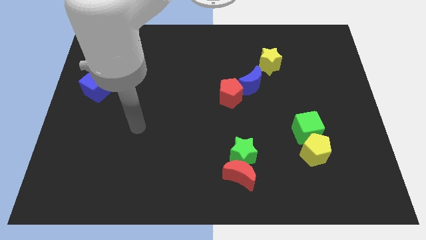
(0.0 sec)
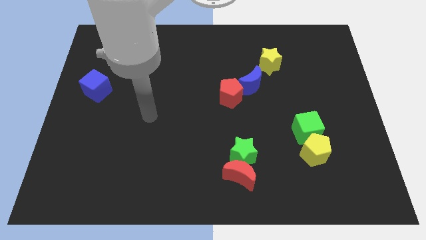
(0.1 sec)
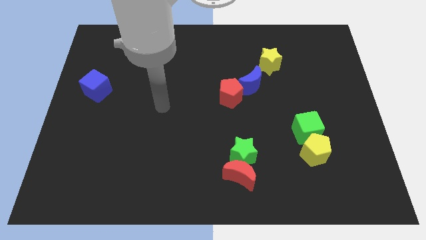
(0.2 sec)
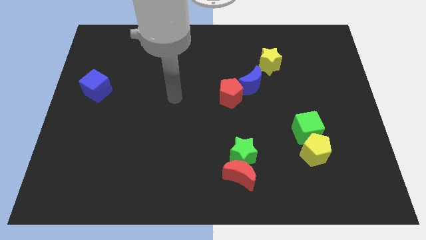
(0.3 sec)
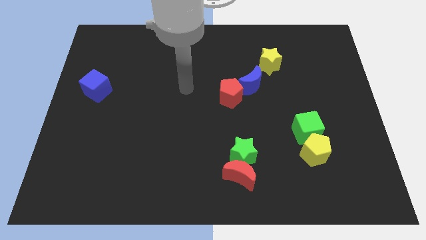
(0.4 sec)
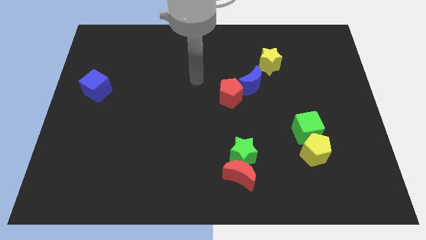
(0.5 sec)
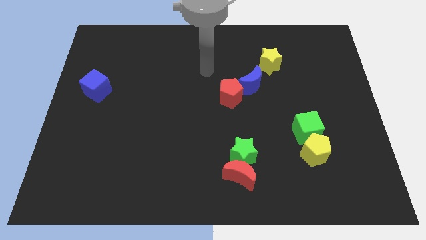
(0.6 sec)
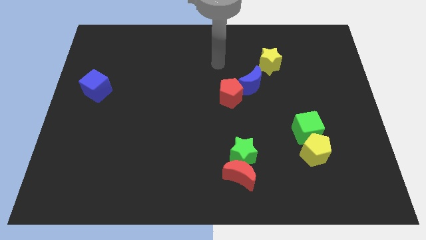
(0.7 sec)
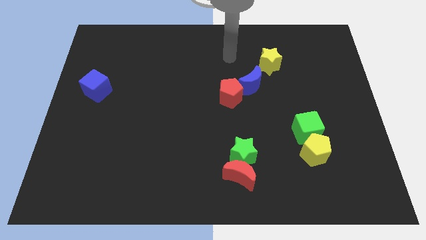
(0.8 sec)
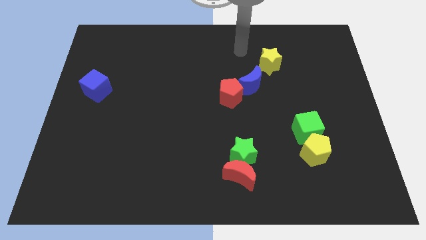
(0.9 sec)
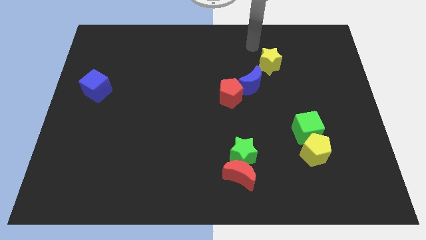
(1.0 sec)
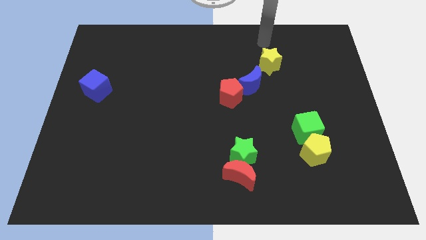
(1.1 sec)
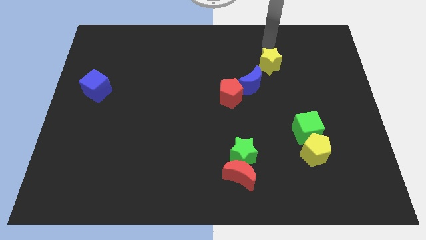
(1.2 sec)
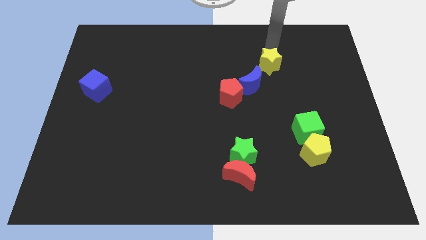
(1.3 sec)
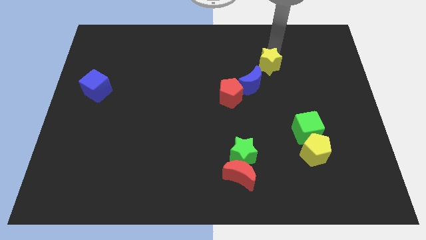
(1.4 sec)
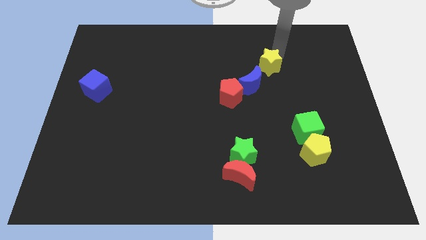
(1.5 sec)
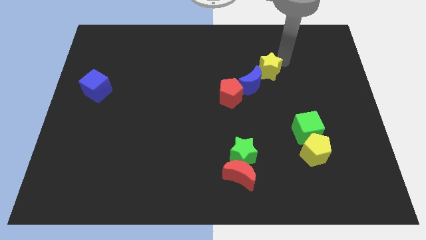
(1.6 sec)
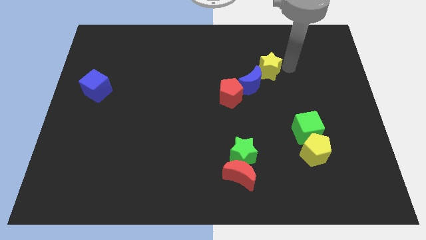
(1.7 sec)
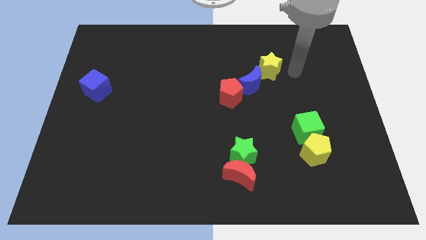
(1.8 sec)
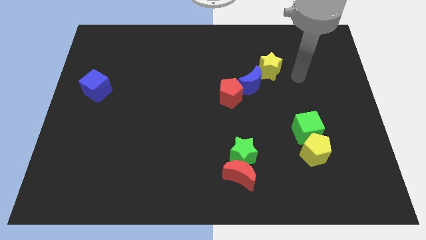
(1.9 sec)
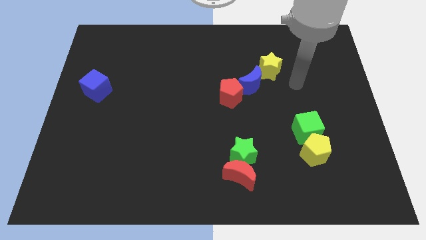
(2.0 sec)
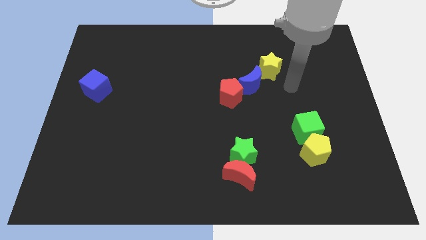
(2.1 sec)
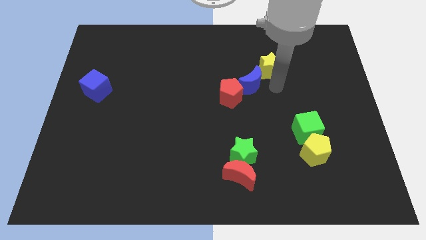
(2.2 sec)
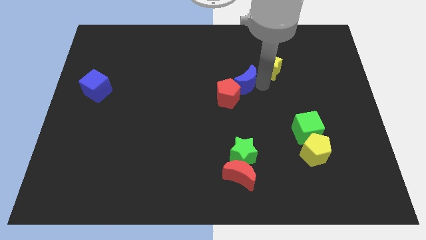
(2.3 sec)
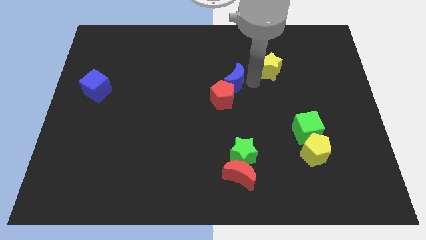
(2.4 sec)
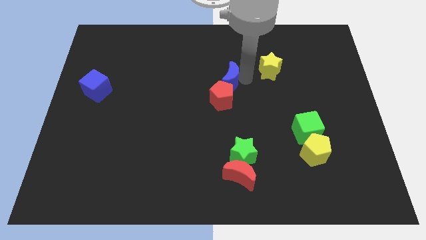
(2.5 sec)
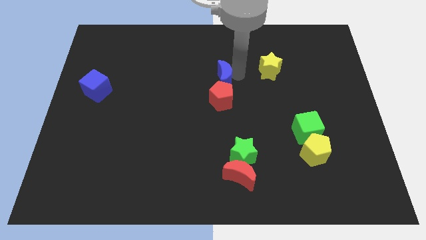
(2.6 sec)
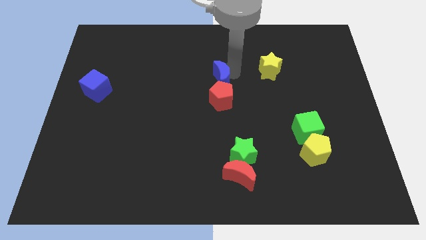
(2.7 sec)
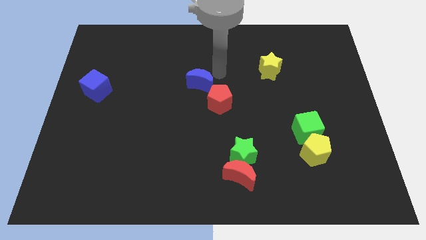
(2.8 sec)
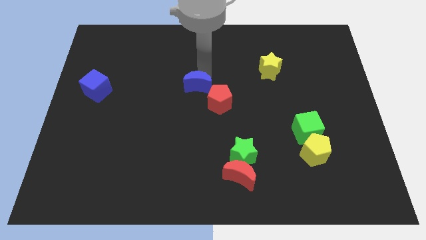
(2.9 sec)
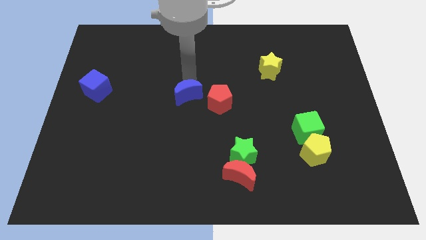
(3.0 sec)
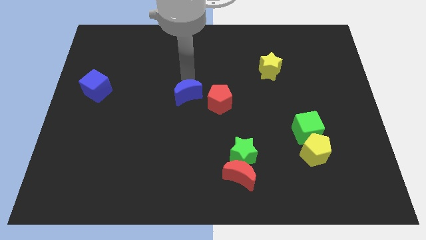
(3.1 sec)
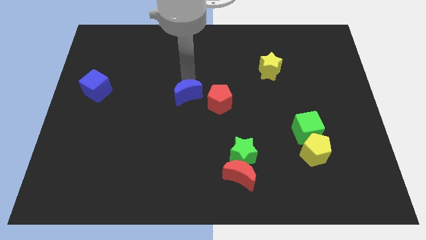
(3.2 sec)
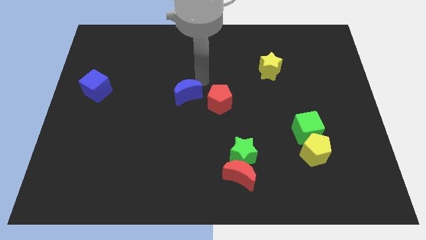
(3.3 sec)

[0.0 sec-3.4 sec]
move the blue moon away from the red pentagon and yellow star

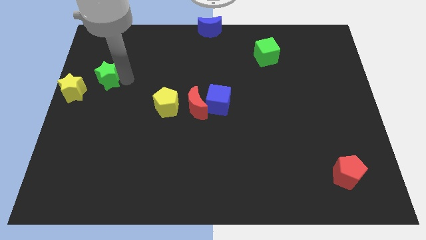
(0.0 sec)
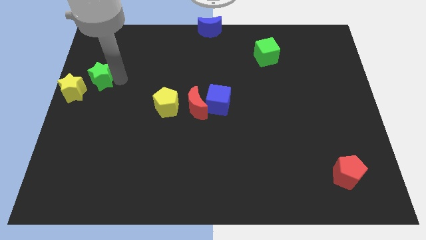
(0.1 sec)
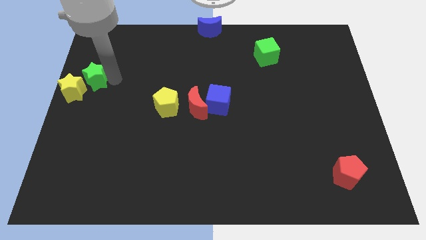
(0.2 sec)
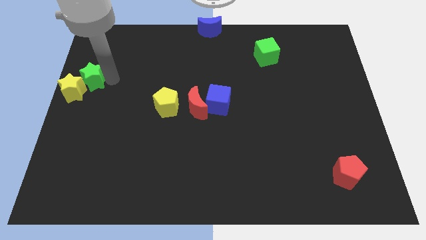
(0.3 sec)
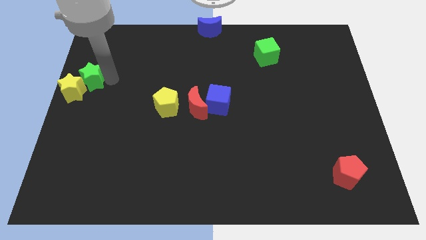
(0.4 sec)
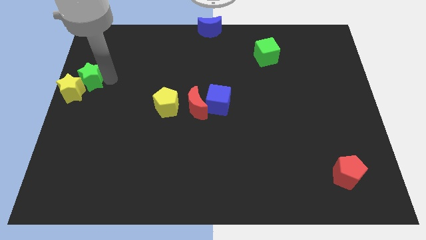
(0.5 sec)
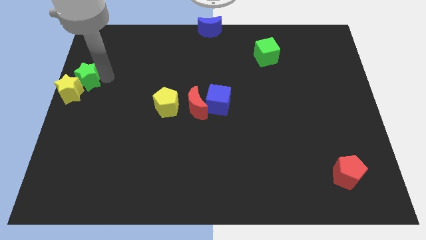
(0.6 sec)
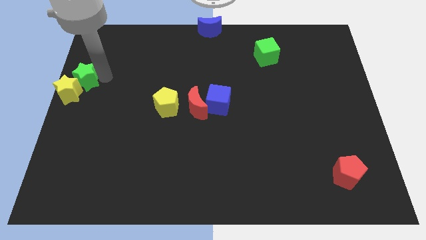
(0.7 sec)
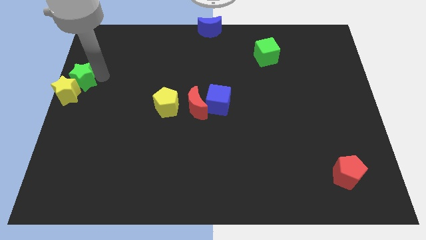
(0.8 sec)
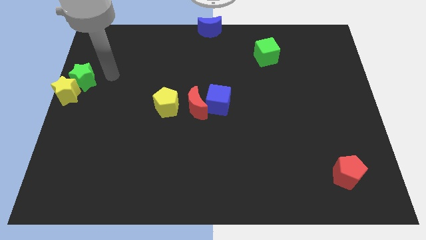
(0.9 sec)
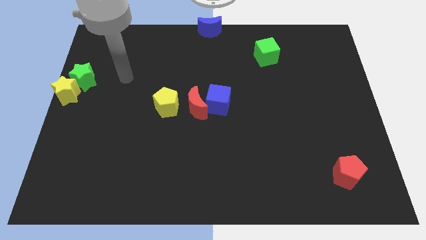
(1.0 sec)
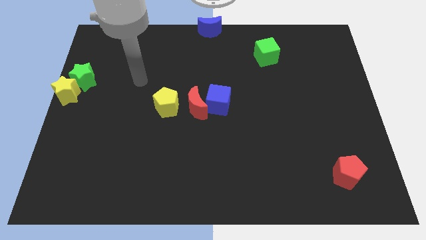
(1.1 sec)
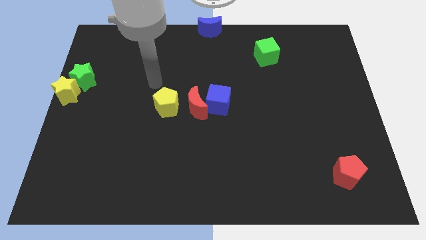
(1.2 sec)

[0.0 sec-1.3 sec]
push the green star into the yellow star

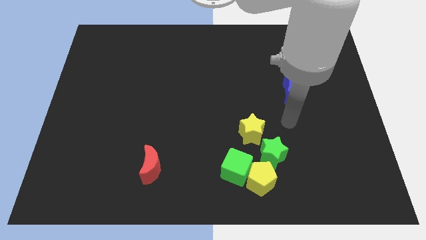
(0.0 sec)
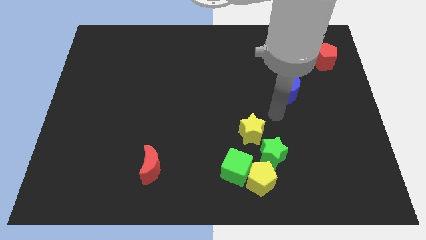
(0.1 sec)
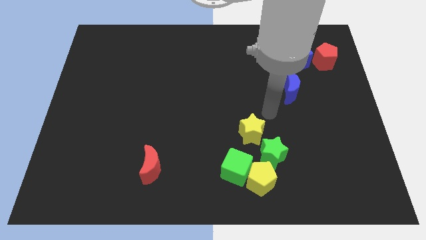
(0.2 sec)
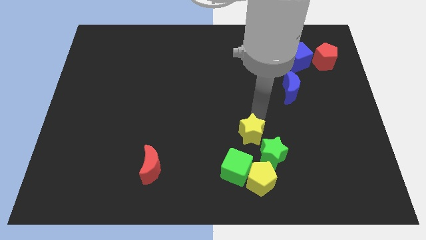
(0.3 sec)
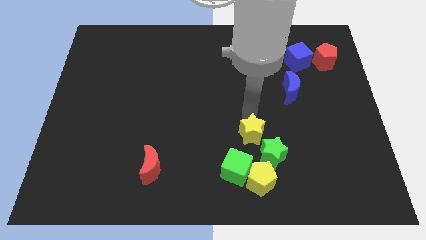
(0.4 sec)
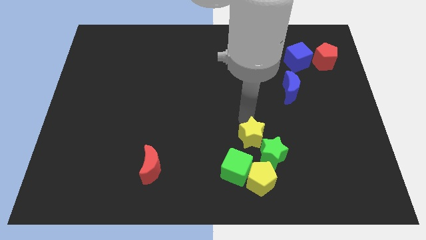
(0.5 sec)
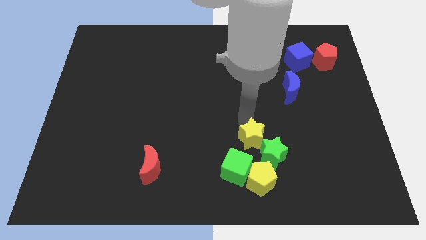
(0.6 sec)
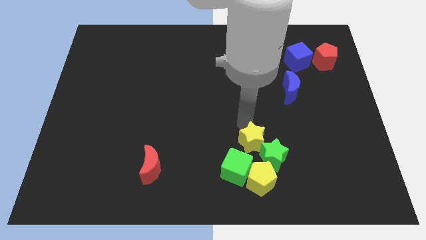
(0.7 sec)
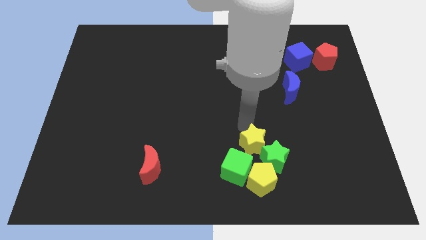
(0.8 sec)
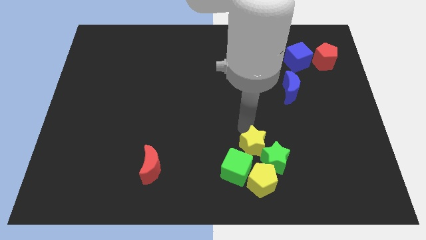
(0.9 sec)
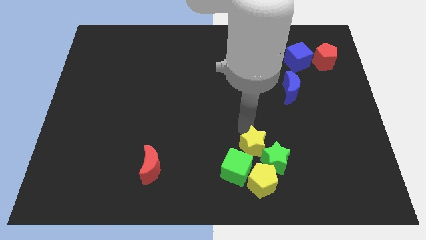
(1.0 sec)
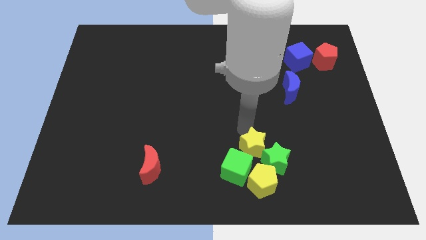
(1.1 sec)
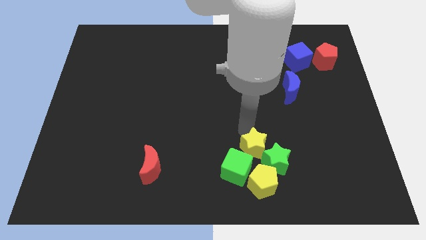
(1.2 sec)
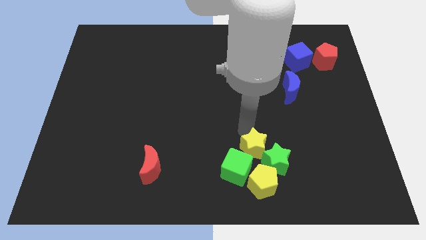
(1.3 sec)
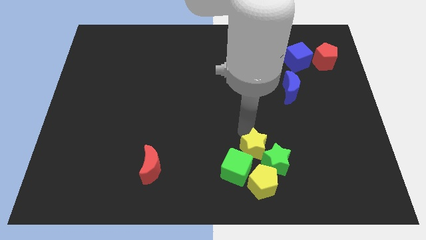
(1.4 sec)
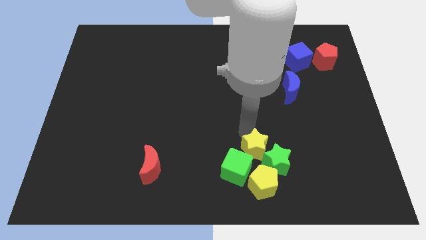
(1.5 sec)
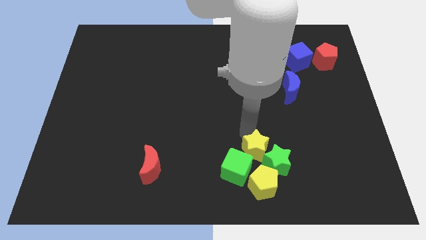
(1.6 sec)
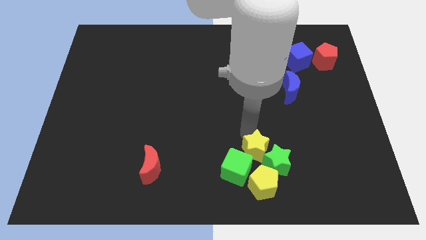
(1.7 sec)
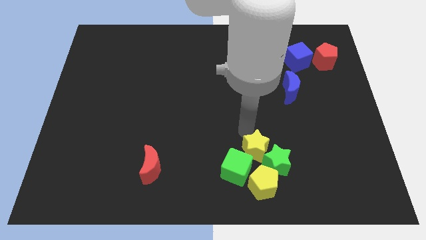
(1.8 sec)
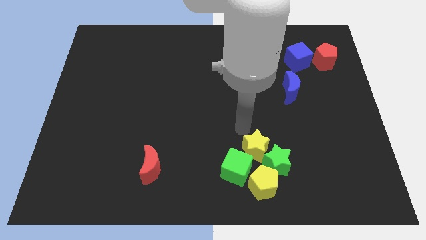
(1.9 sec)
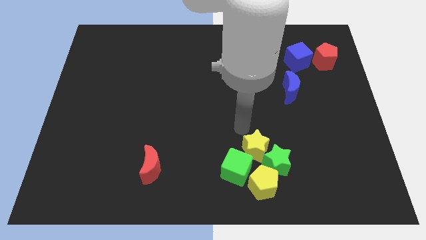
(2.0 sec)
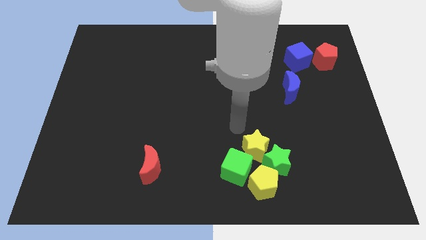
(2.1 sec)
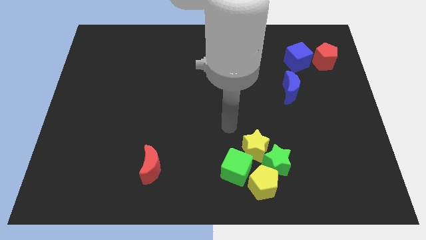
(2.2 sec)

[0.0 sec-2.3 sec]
move yellow star slightly down

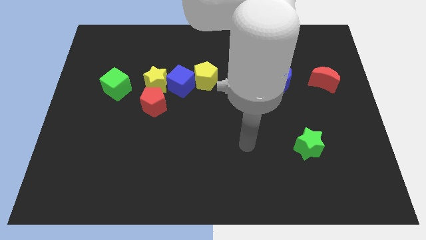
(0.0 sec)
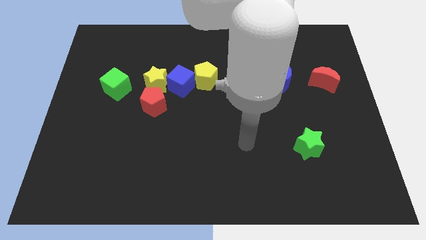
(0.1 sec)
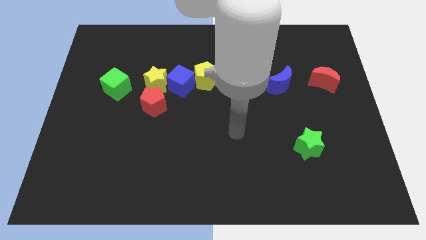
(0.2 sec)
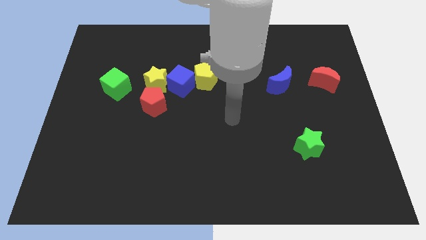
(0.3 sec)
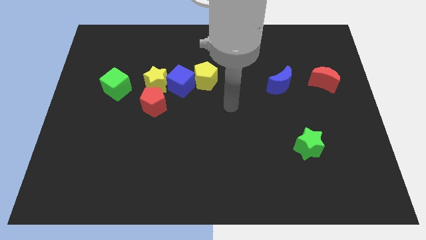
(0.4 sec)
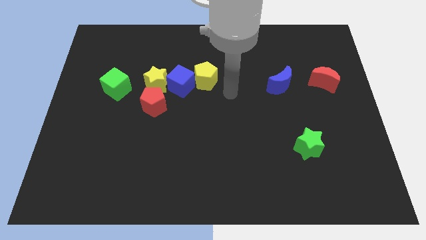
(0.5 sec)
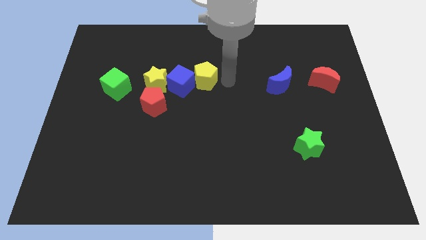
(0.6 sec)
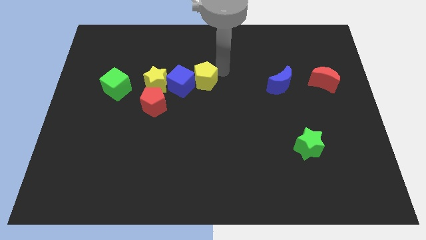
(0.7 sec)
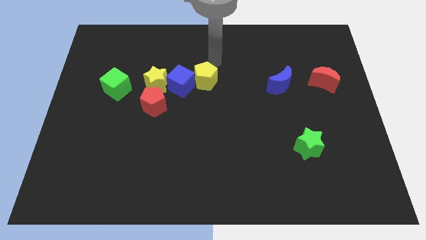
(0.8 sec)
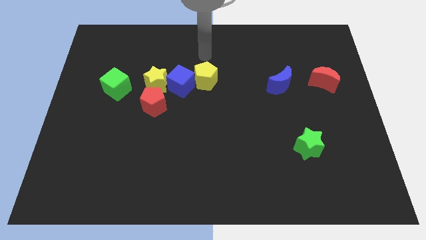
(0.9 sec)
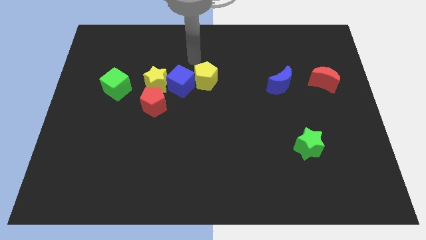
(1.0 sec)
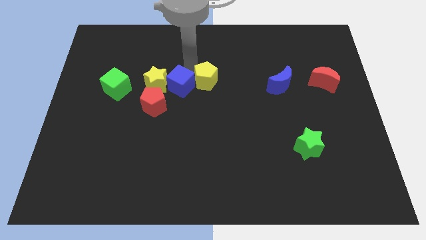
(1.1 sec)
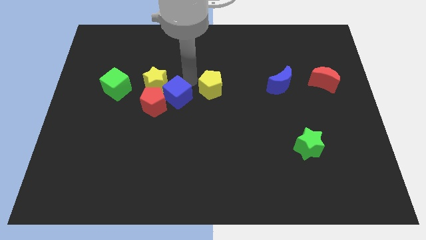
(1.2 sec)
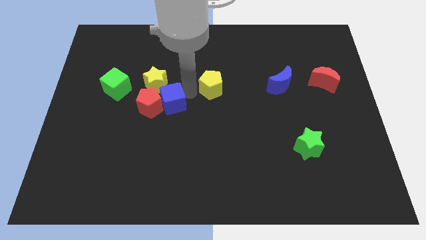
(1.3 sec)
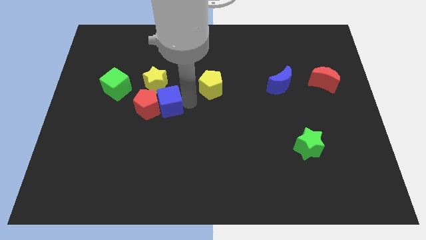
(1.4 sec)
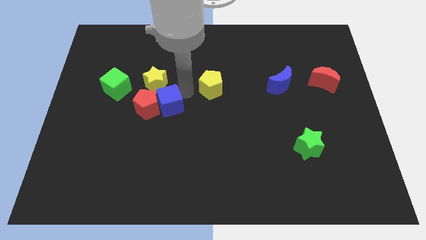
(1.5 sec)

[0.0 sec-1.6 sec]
place your arm in between yellow pentagon and blue cube

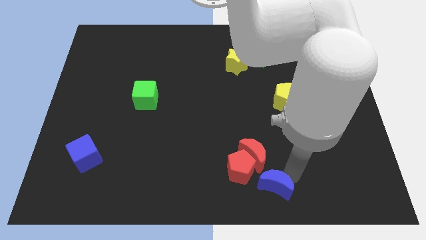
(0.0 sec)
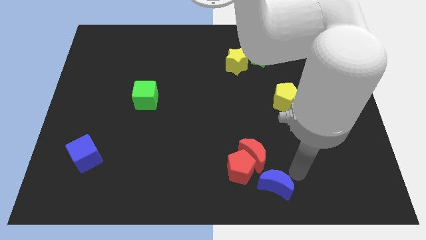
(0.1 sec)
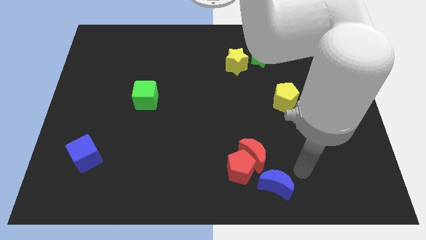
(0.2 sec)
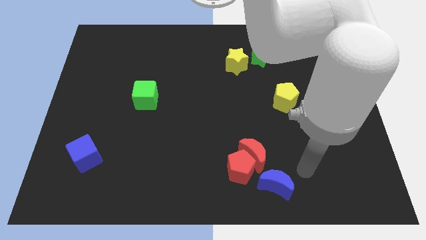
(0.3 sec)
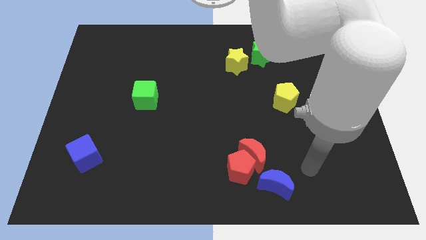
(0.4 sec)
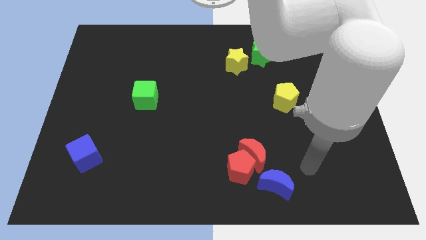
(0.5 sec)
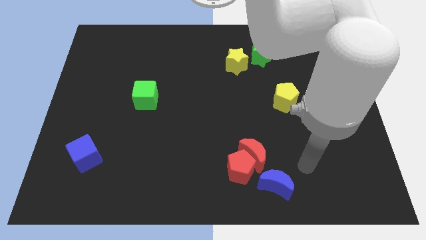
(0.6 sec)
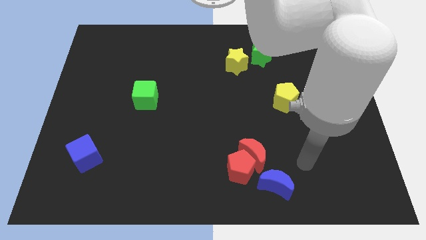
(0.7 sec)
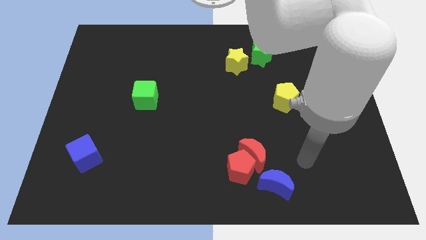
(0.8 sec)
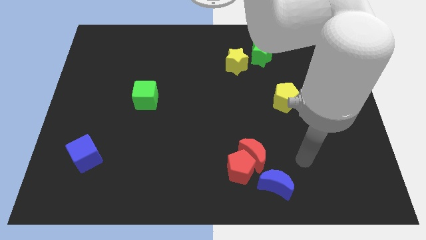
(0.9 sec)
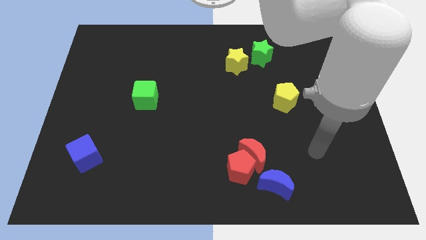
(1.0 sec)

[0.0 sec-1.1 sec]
move your arm away from the blue crescent
